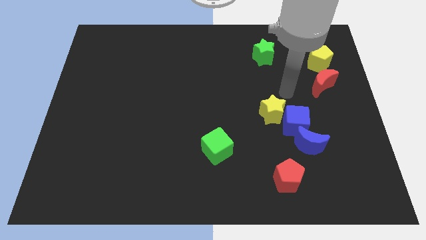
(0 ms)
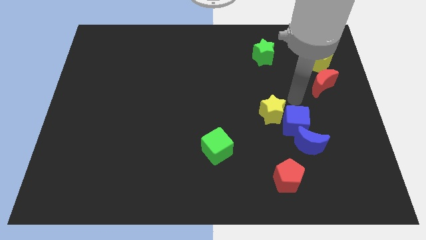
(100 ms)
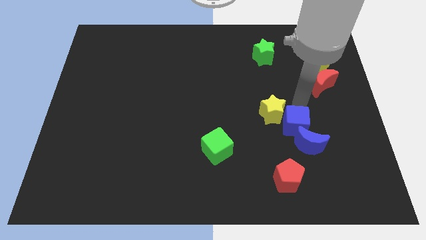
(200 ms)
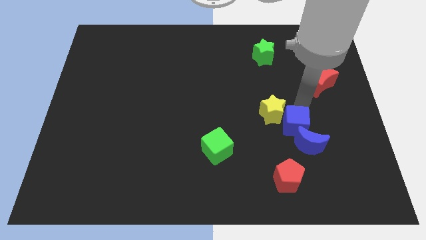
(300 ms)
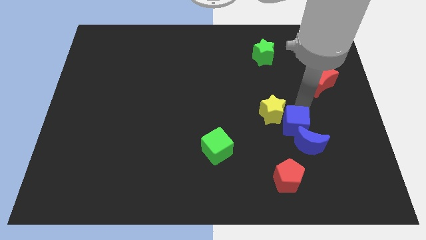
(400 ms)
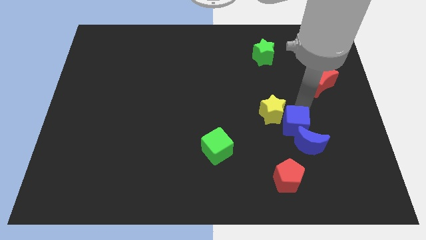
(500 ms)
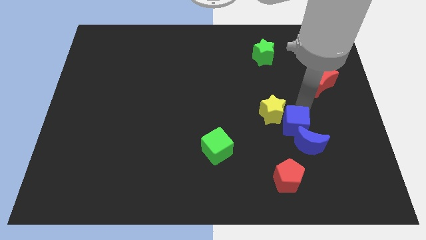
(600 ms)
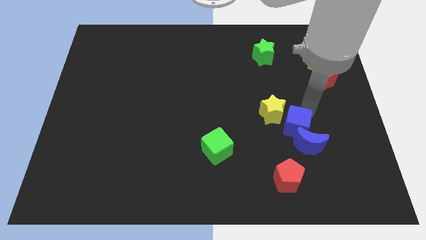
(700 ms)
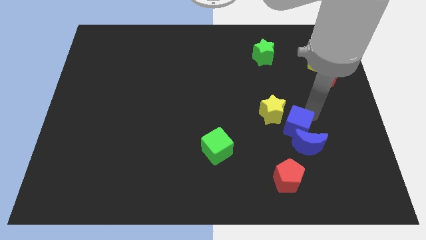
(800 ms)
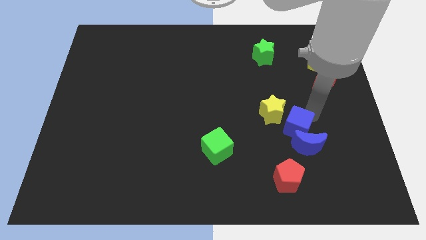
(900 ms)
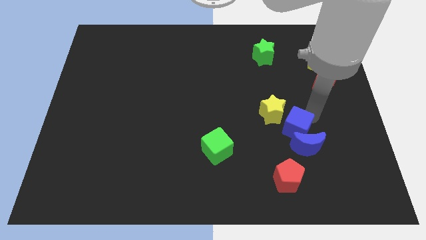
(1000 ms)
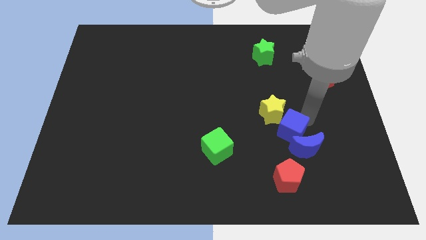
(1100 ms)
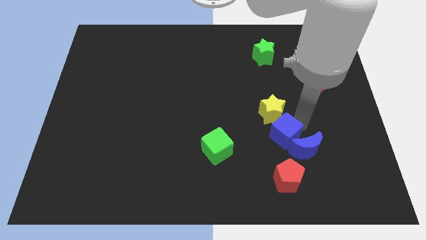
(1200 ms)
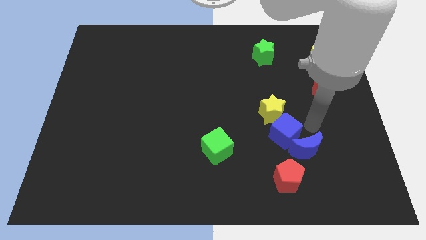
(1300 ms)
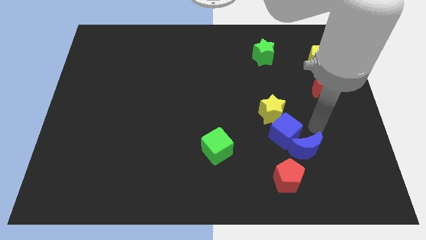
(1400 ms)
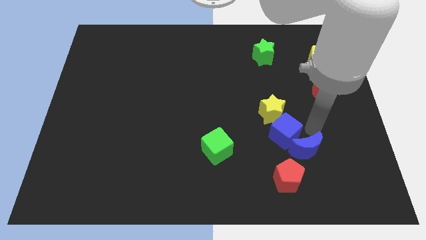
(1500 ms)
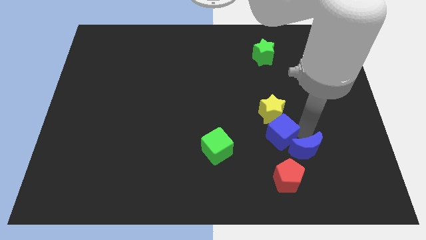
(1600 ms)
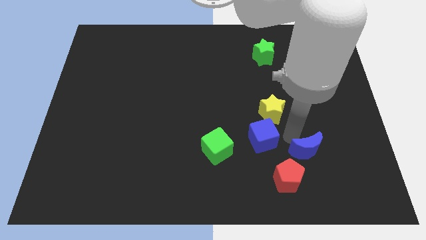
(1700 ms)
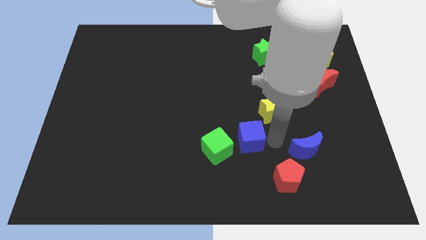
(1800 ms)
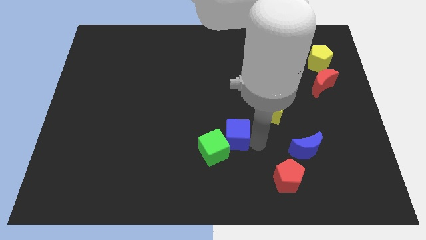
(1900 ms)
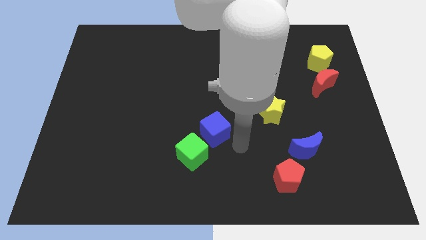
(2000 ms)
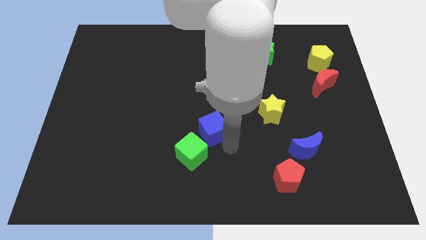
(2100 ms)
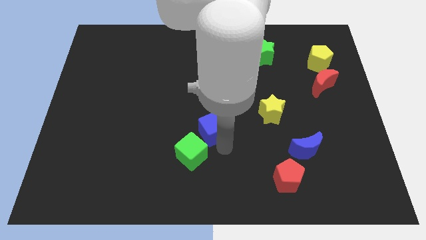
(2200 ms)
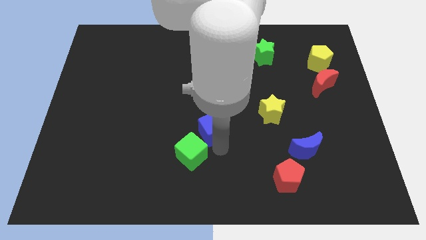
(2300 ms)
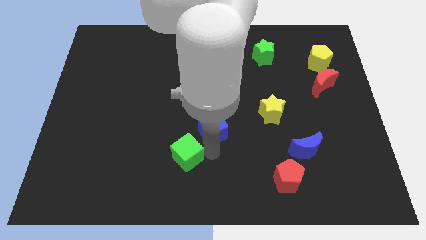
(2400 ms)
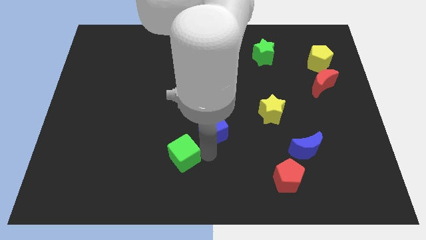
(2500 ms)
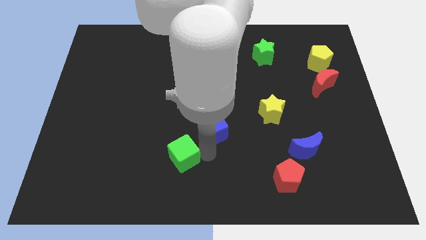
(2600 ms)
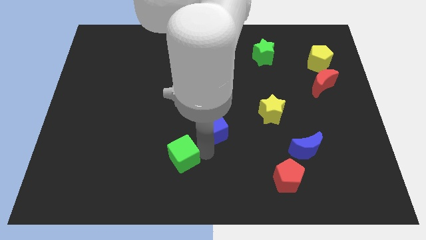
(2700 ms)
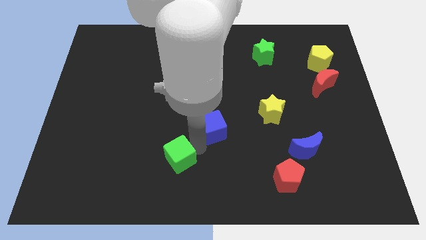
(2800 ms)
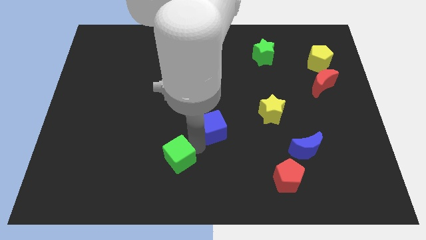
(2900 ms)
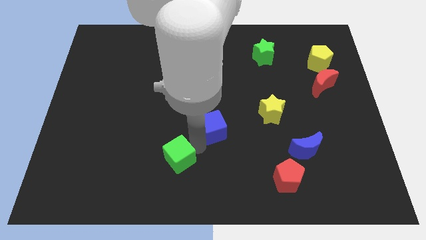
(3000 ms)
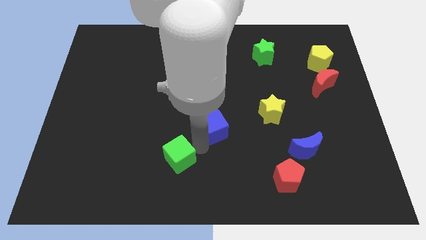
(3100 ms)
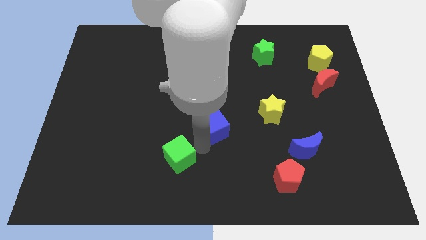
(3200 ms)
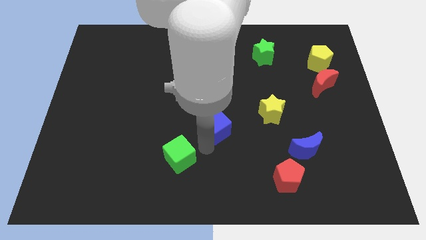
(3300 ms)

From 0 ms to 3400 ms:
push the blue cube diagonal to the green cube

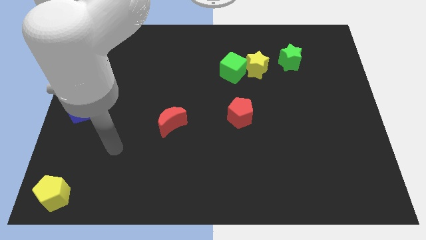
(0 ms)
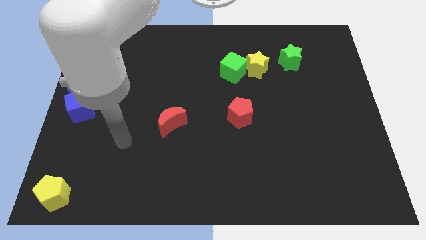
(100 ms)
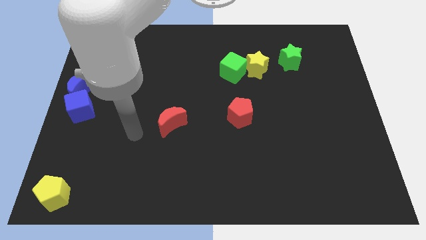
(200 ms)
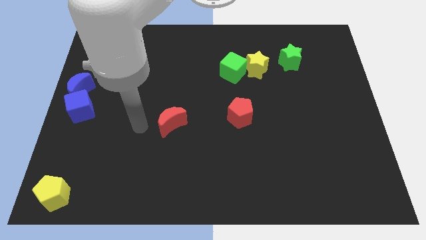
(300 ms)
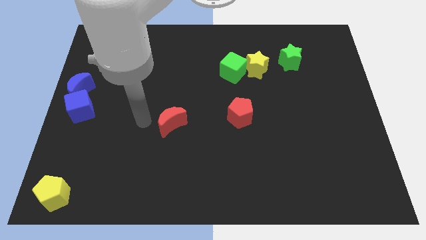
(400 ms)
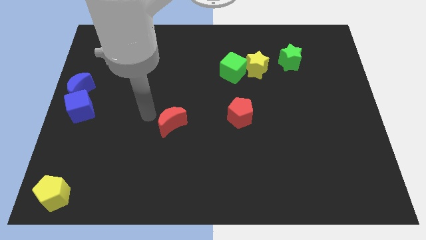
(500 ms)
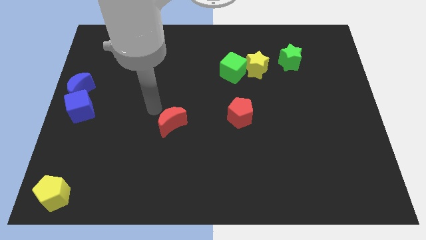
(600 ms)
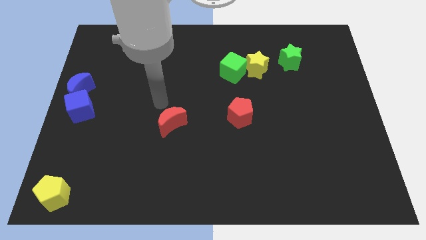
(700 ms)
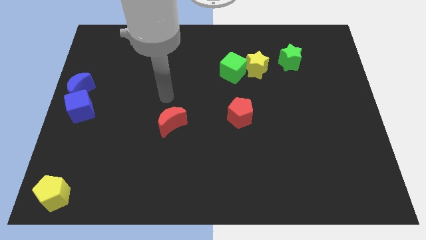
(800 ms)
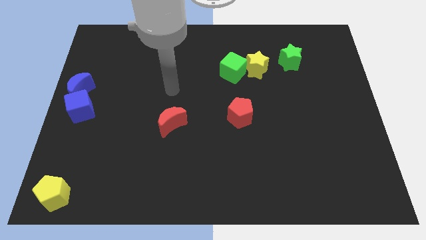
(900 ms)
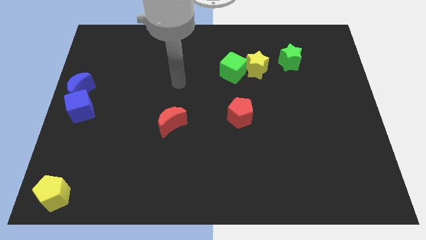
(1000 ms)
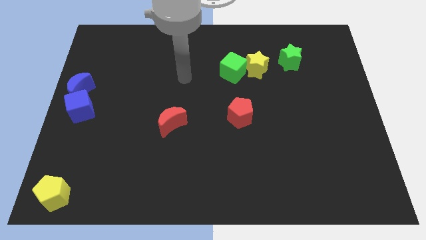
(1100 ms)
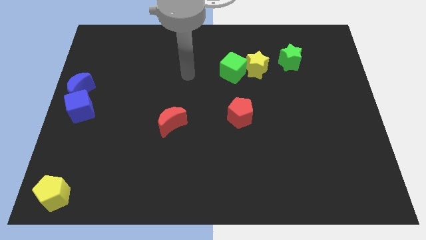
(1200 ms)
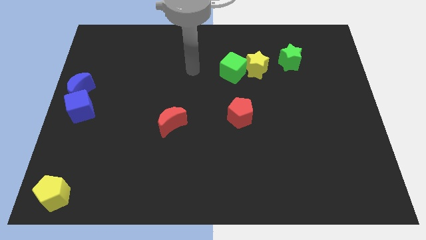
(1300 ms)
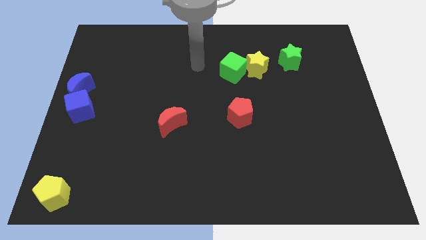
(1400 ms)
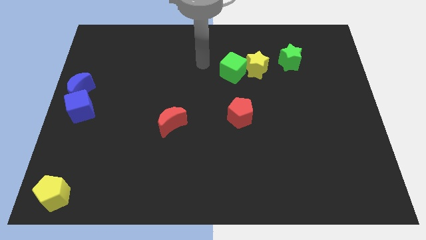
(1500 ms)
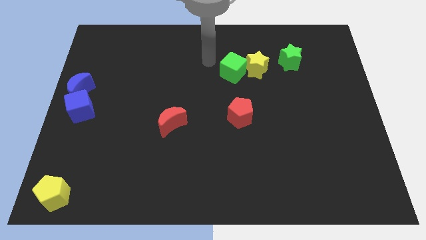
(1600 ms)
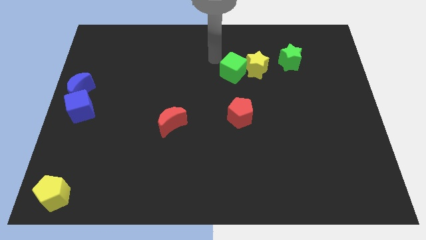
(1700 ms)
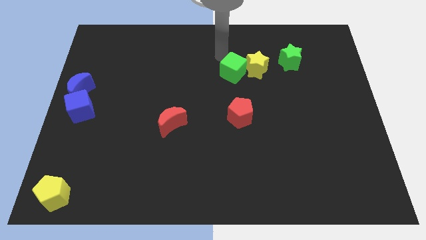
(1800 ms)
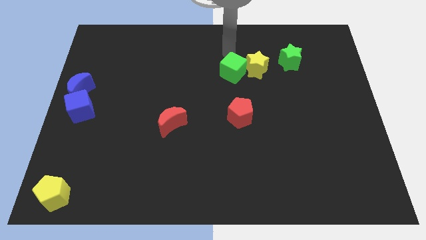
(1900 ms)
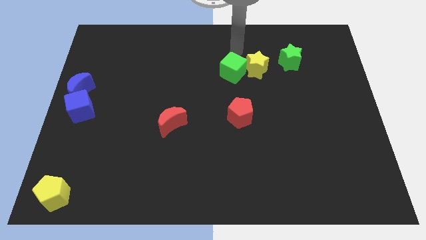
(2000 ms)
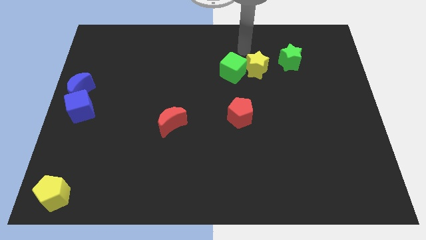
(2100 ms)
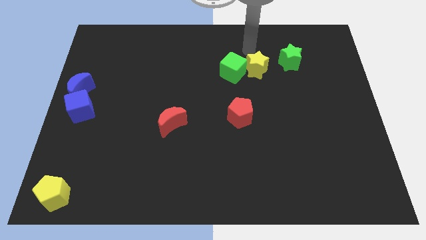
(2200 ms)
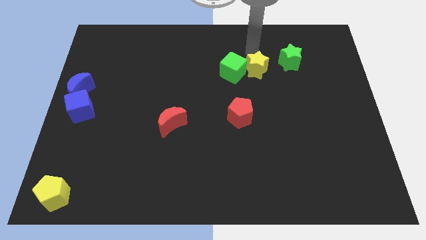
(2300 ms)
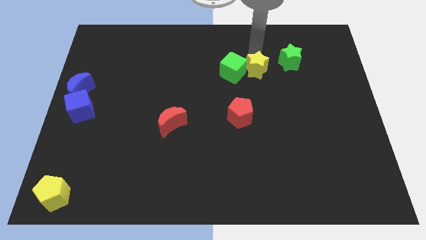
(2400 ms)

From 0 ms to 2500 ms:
move the arm to the top of yellow star

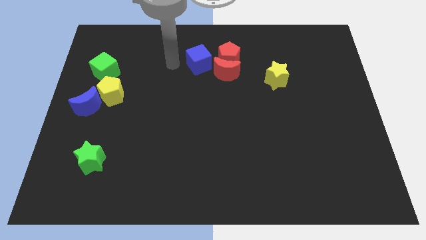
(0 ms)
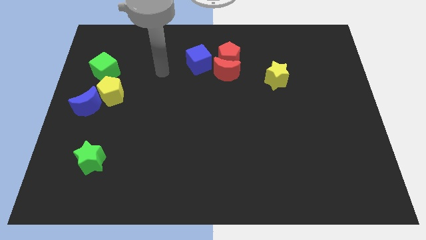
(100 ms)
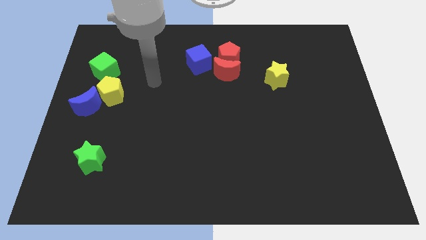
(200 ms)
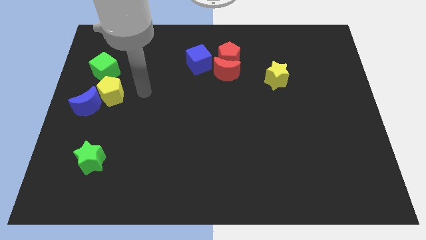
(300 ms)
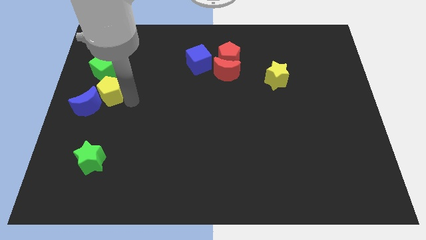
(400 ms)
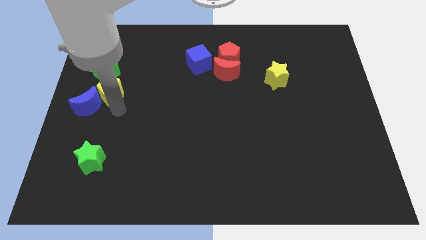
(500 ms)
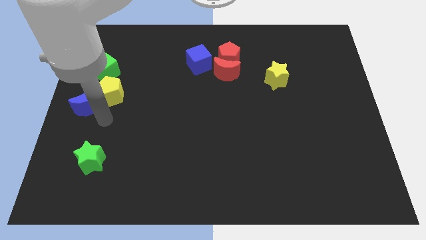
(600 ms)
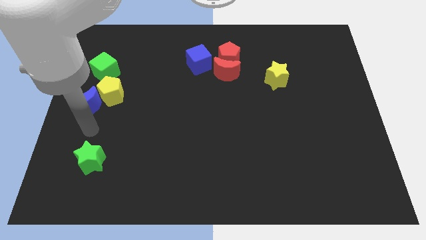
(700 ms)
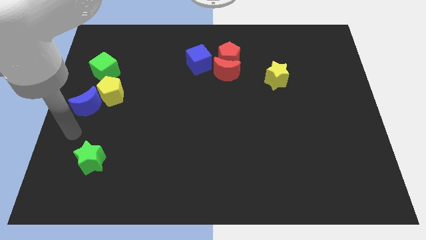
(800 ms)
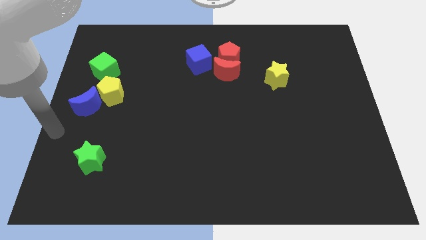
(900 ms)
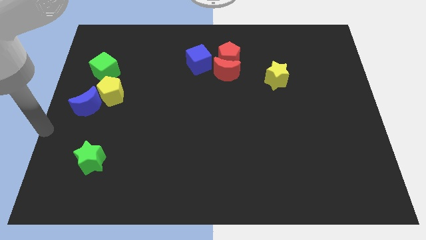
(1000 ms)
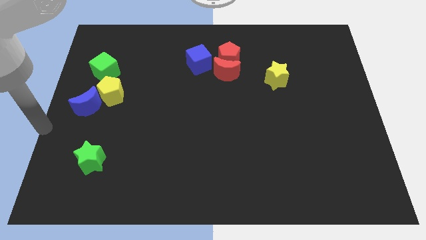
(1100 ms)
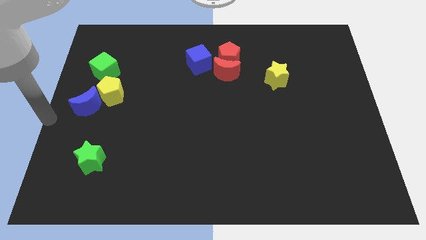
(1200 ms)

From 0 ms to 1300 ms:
point your arm at the center left side of the board

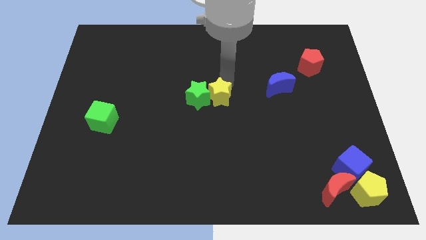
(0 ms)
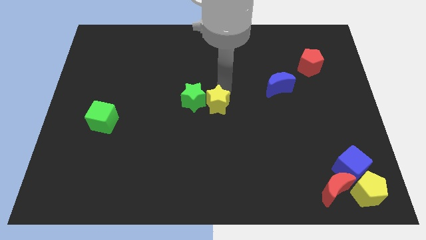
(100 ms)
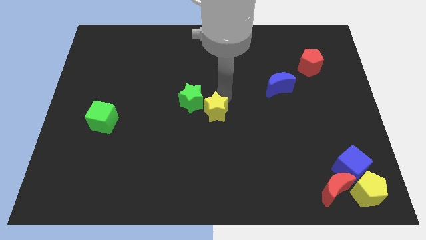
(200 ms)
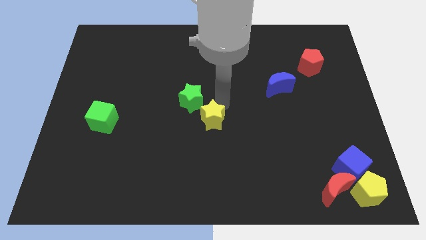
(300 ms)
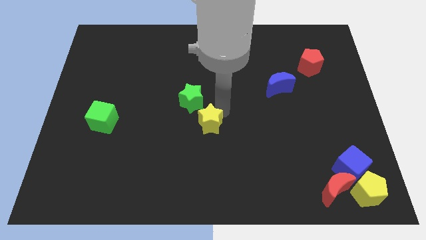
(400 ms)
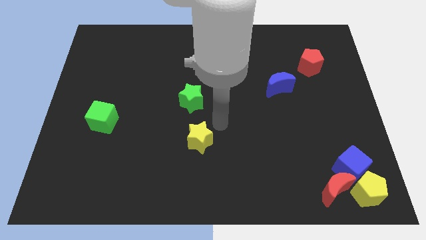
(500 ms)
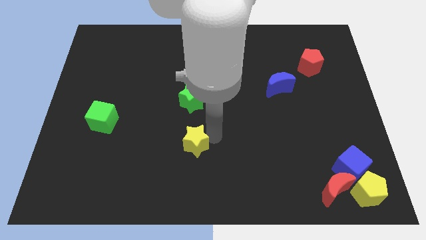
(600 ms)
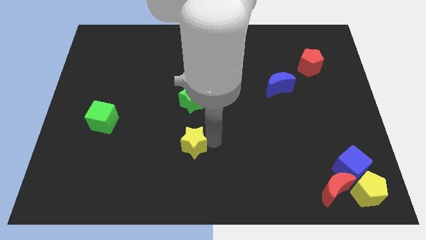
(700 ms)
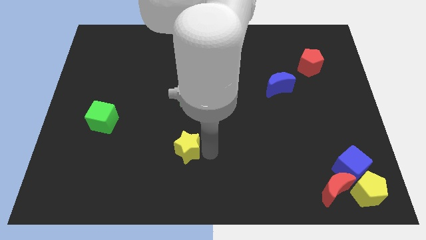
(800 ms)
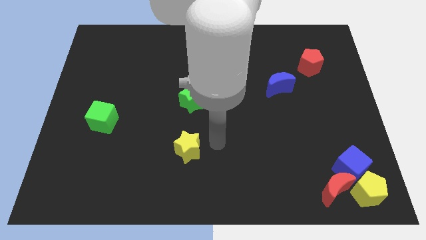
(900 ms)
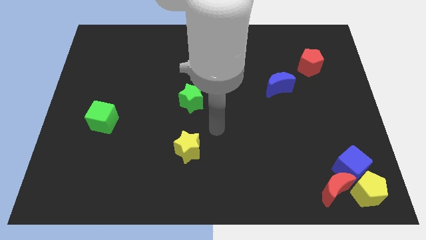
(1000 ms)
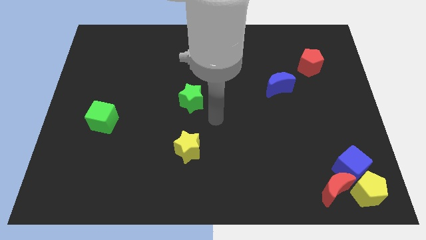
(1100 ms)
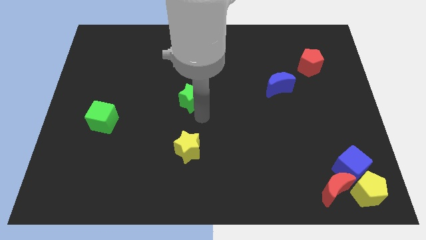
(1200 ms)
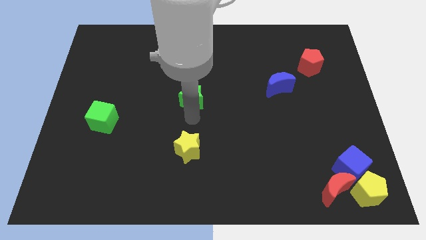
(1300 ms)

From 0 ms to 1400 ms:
place the yellow star below the green star

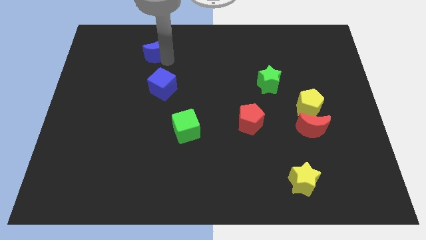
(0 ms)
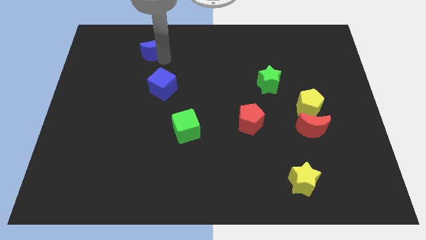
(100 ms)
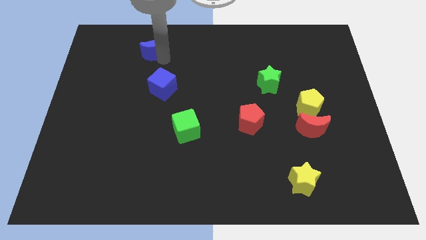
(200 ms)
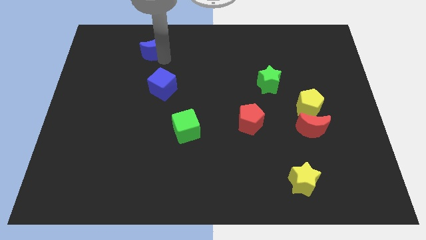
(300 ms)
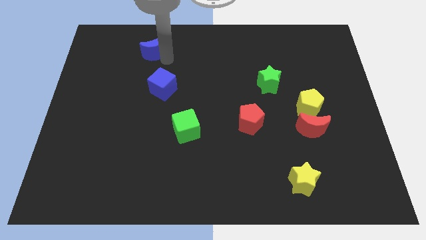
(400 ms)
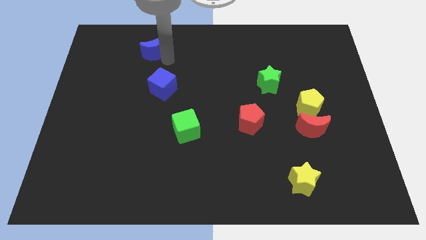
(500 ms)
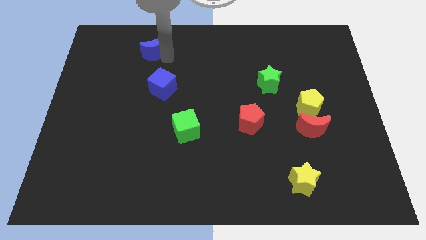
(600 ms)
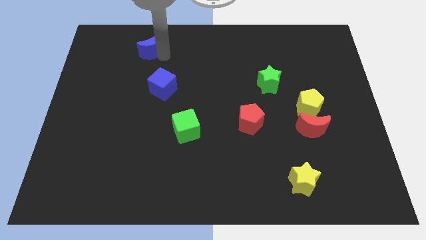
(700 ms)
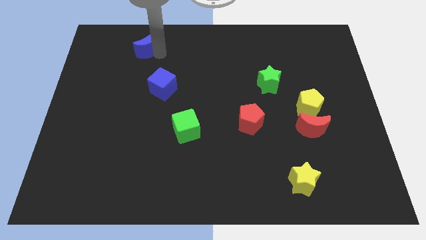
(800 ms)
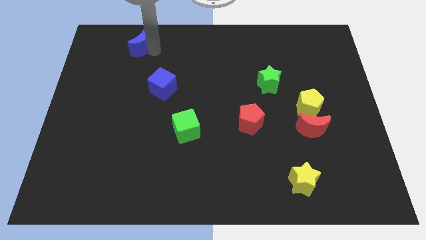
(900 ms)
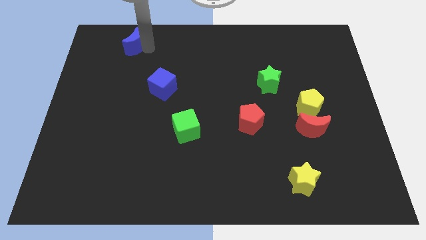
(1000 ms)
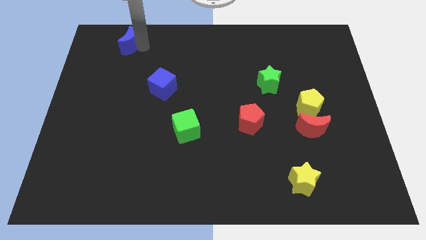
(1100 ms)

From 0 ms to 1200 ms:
slide the blue moon diagonally on the top left side of the blue cube
